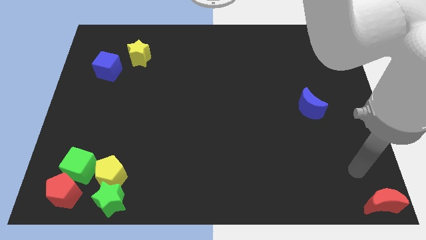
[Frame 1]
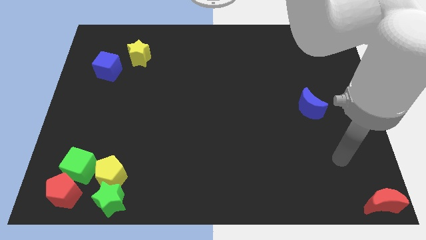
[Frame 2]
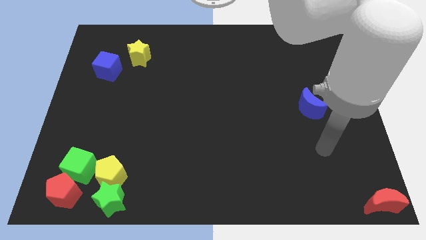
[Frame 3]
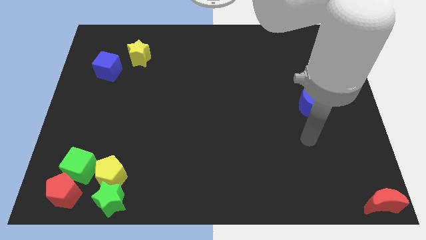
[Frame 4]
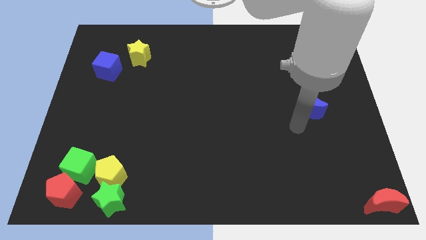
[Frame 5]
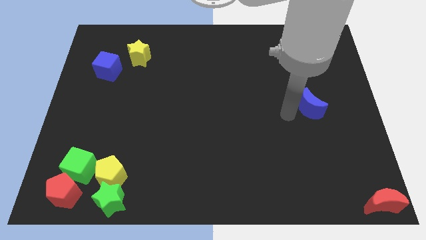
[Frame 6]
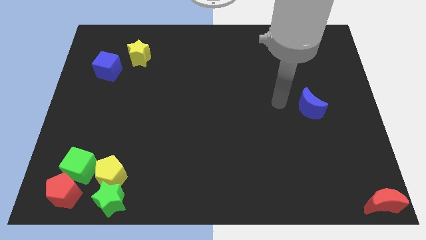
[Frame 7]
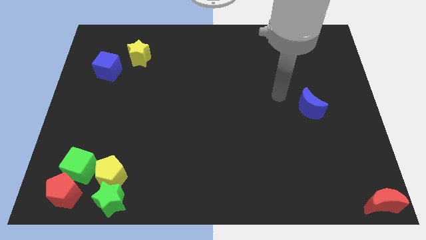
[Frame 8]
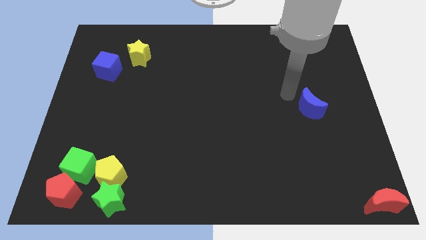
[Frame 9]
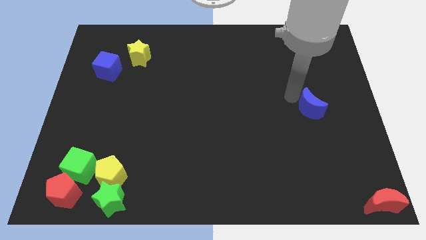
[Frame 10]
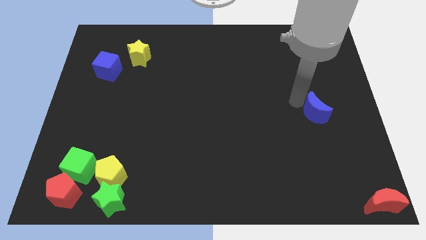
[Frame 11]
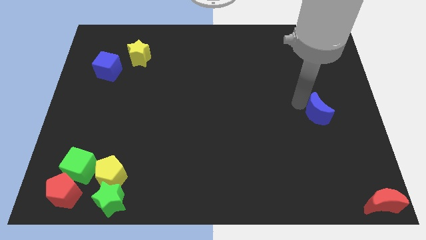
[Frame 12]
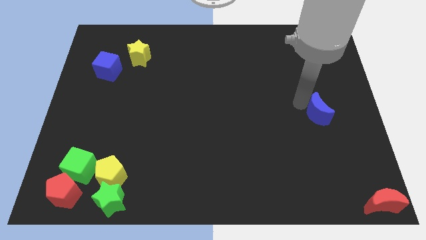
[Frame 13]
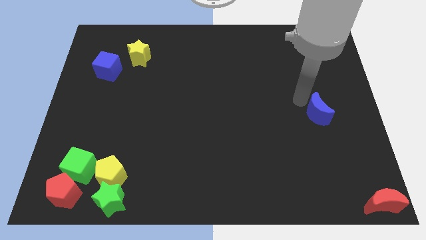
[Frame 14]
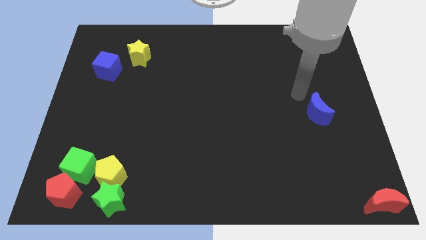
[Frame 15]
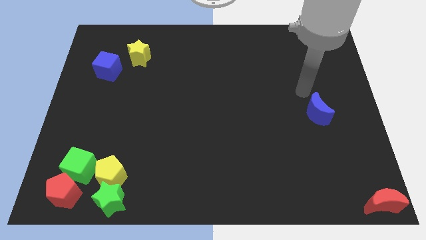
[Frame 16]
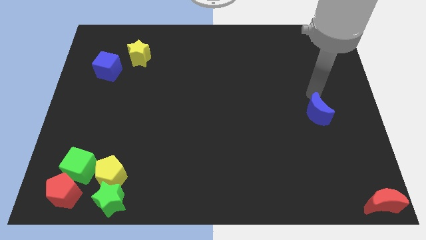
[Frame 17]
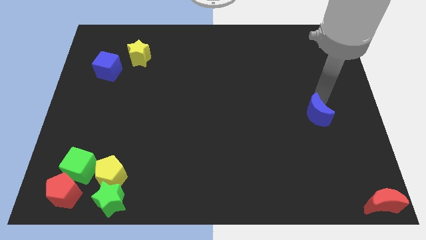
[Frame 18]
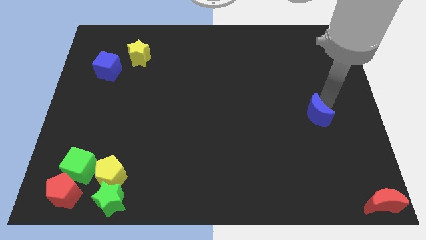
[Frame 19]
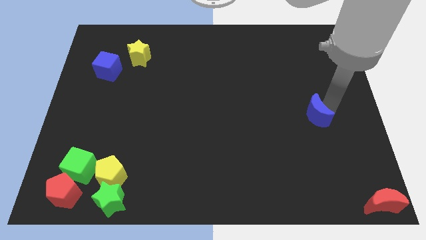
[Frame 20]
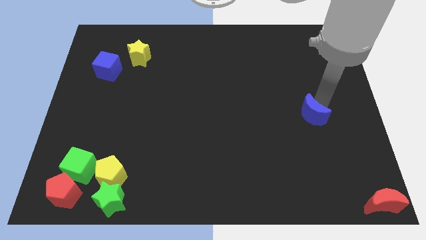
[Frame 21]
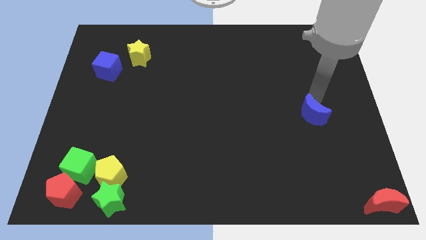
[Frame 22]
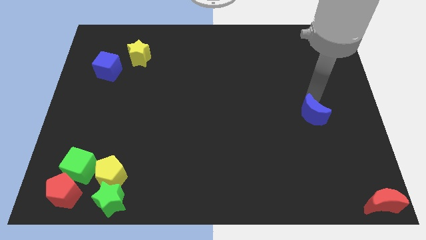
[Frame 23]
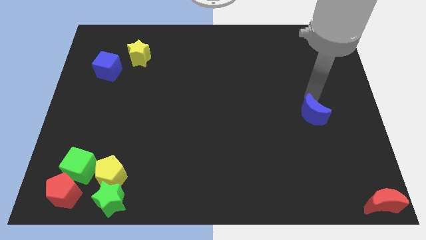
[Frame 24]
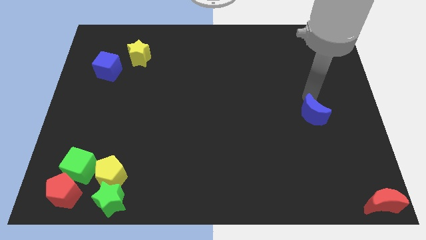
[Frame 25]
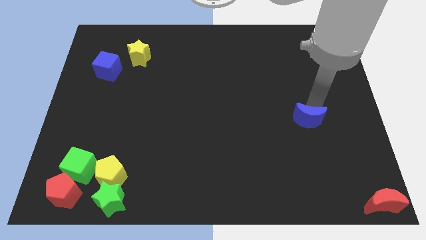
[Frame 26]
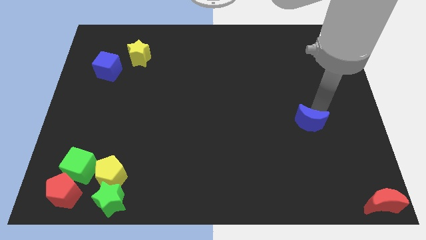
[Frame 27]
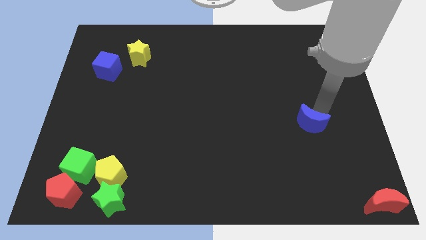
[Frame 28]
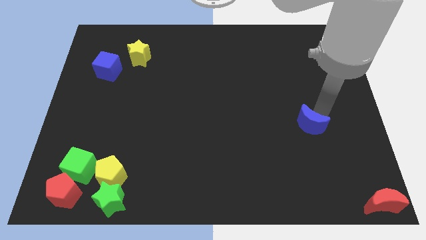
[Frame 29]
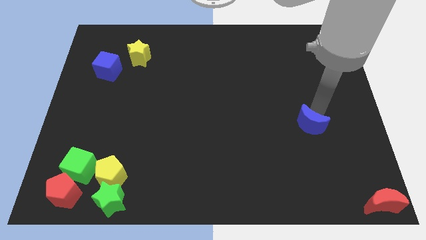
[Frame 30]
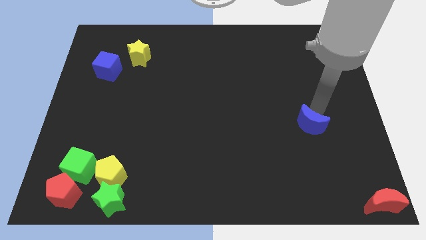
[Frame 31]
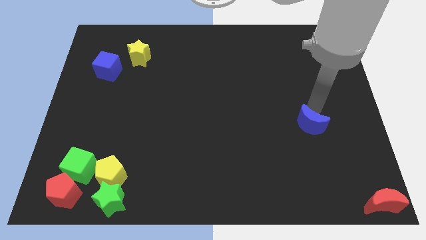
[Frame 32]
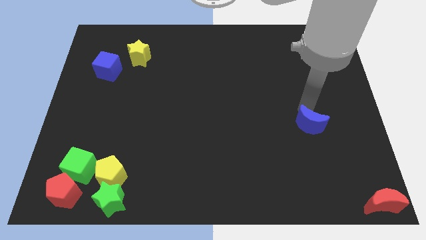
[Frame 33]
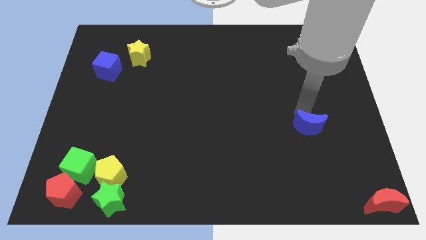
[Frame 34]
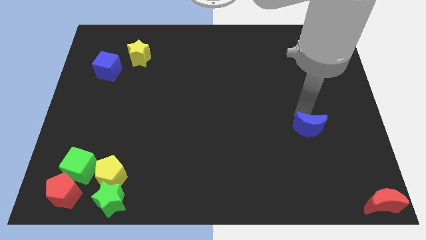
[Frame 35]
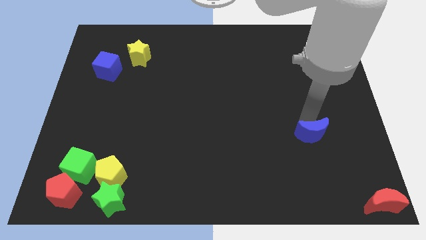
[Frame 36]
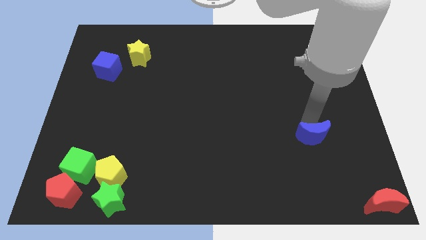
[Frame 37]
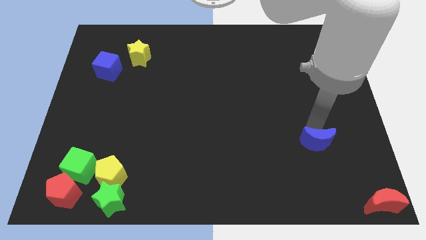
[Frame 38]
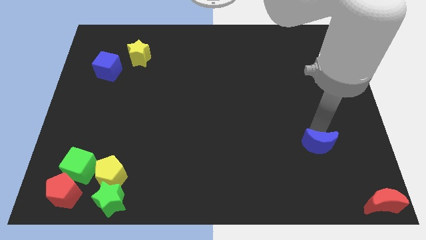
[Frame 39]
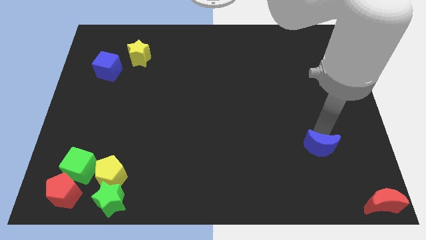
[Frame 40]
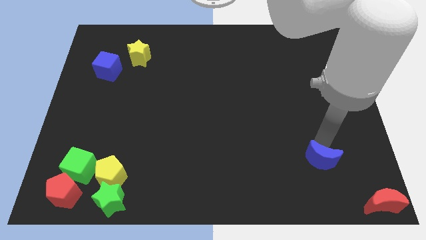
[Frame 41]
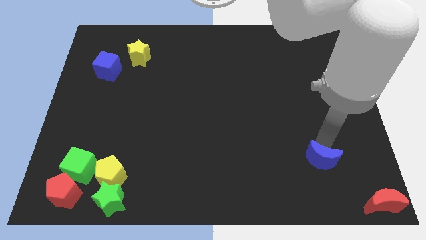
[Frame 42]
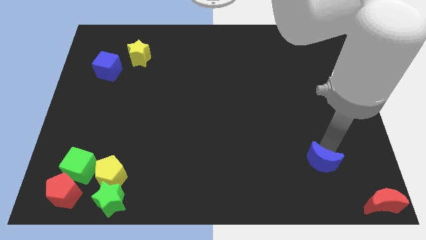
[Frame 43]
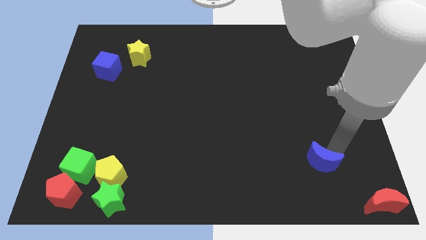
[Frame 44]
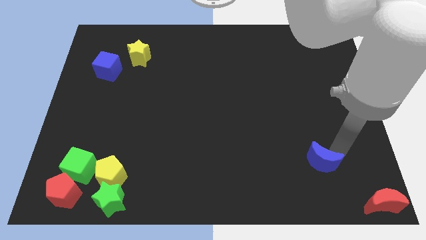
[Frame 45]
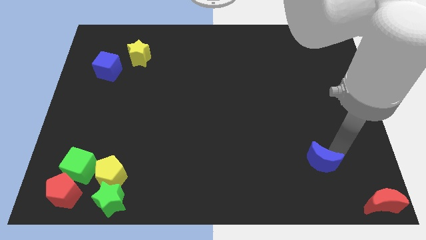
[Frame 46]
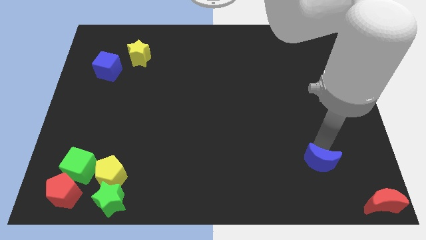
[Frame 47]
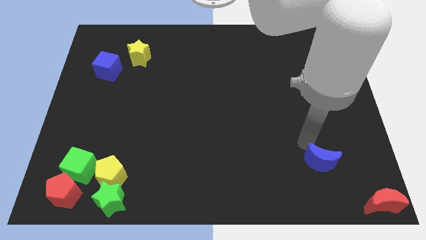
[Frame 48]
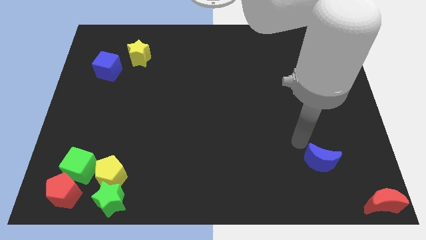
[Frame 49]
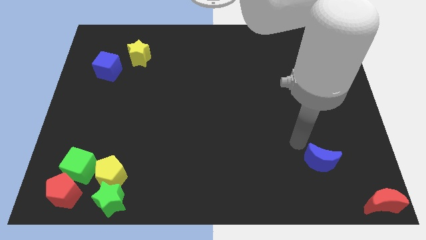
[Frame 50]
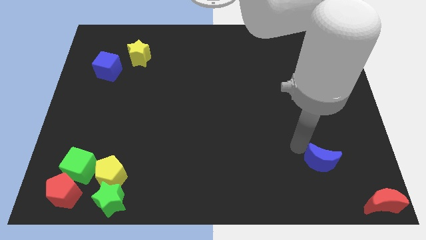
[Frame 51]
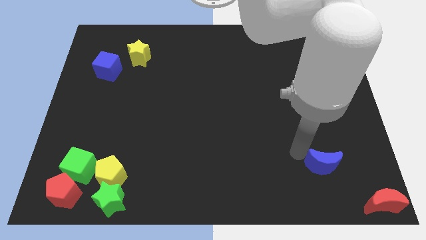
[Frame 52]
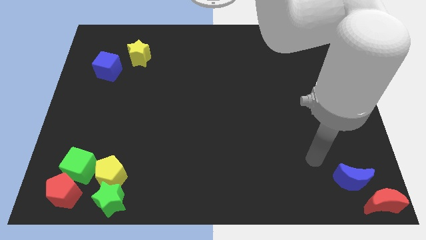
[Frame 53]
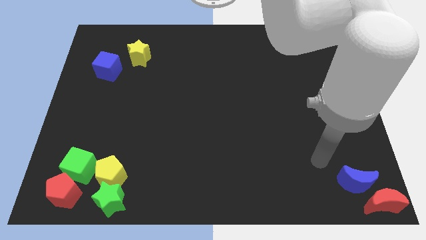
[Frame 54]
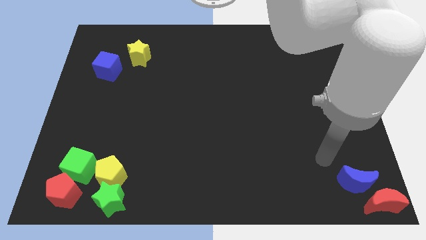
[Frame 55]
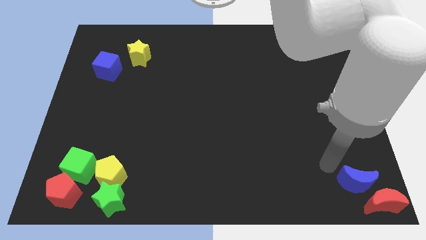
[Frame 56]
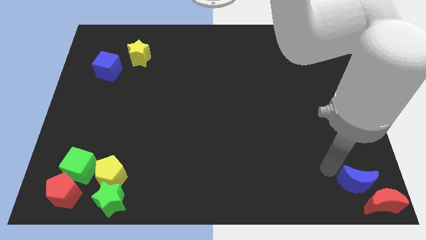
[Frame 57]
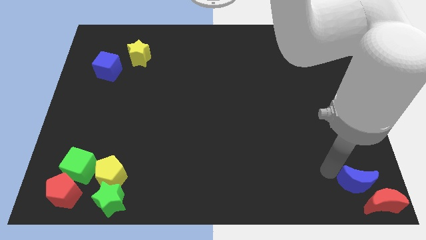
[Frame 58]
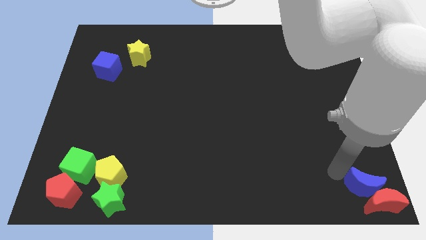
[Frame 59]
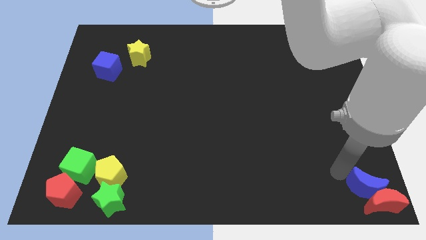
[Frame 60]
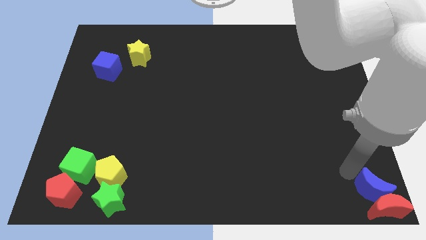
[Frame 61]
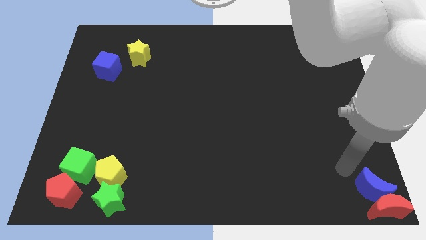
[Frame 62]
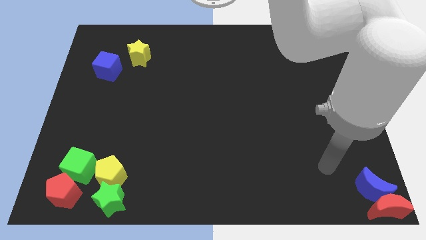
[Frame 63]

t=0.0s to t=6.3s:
move the blue crescent to the top of the red crescent

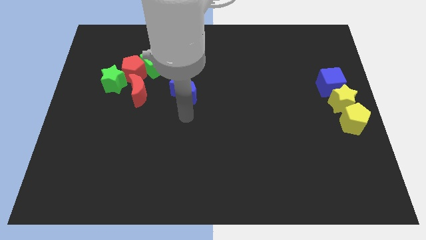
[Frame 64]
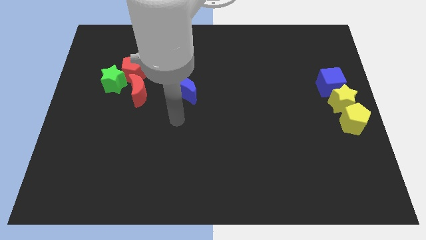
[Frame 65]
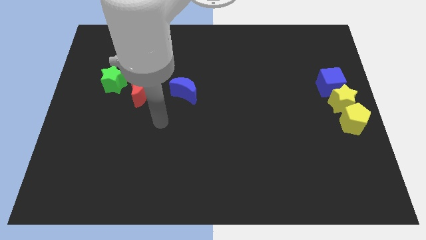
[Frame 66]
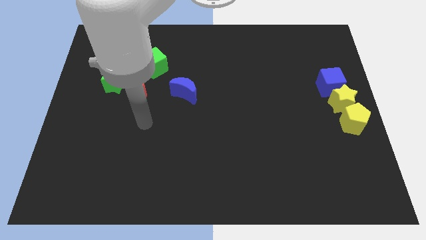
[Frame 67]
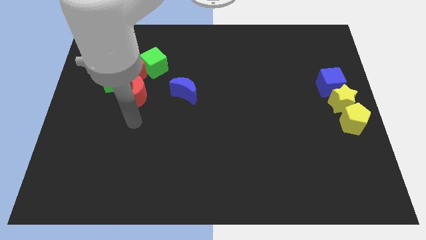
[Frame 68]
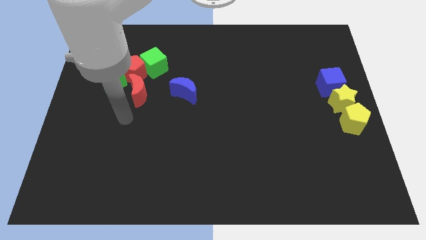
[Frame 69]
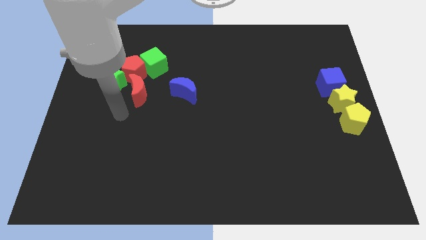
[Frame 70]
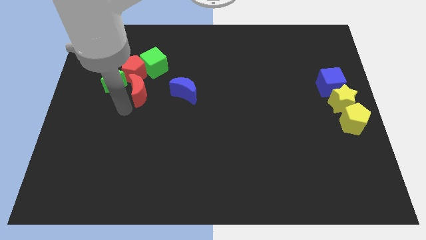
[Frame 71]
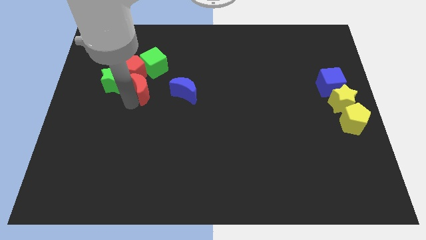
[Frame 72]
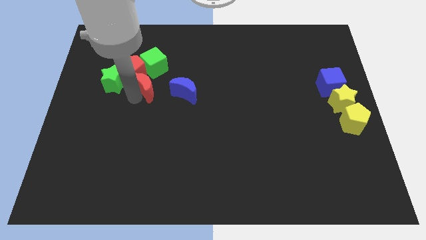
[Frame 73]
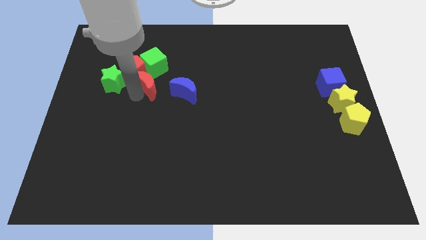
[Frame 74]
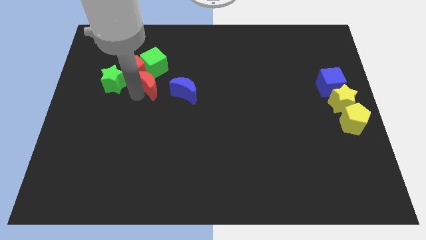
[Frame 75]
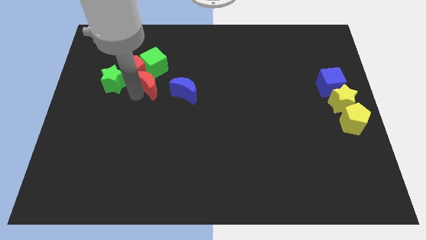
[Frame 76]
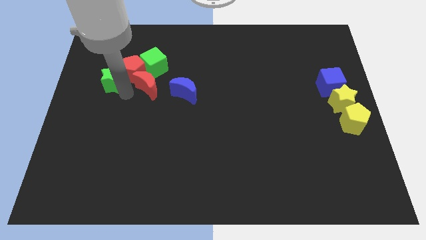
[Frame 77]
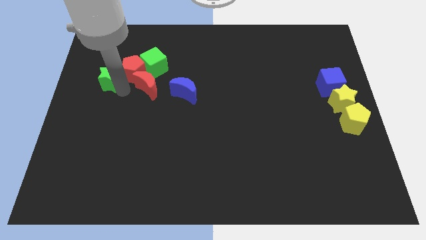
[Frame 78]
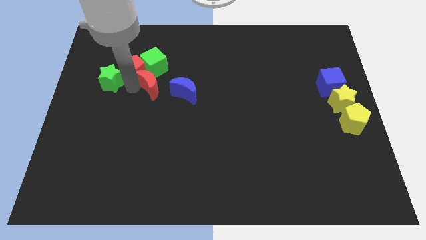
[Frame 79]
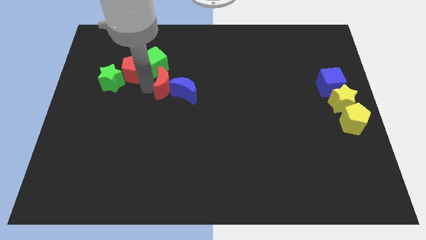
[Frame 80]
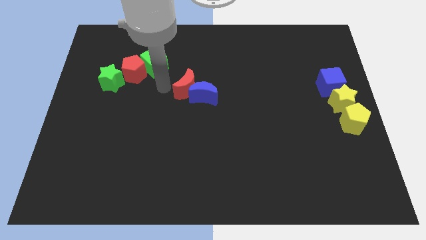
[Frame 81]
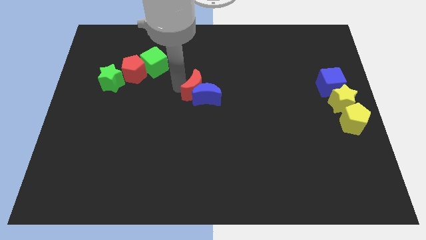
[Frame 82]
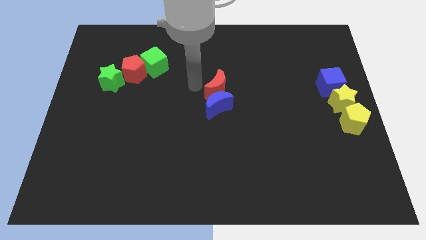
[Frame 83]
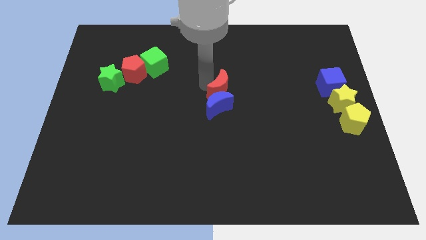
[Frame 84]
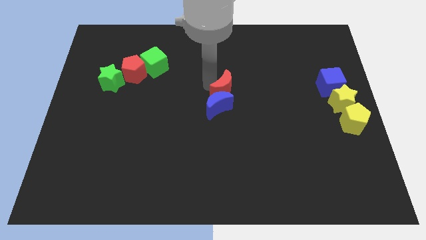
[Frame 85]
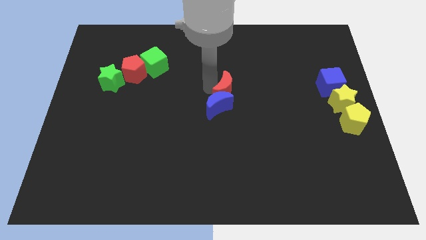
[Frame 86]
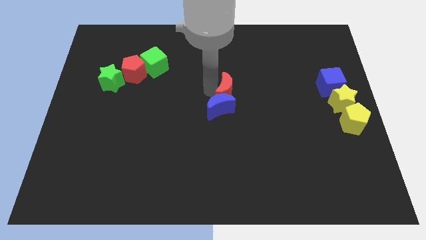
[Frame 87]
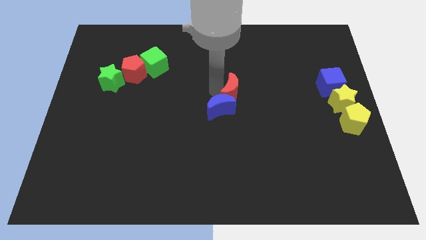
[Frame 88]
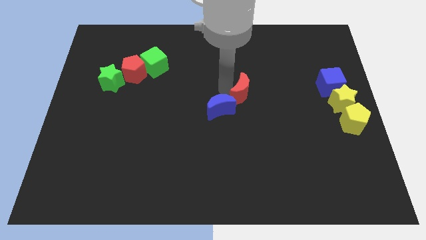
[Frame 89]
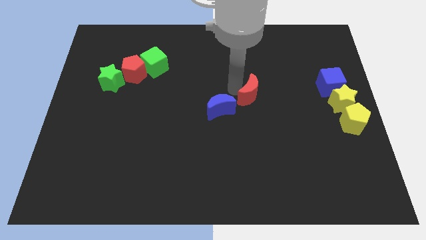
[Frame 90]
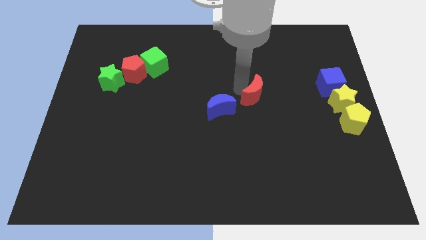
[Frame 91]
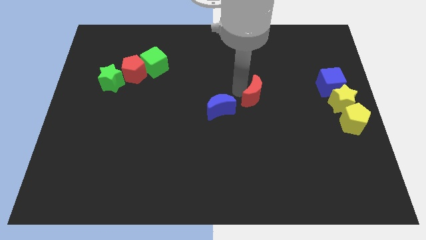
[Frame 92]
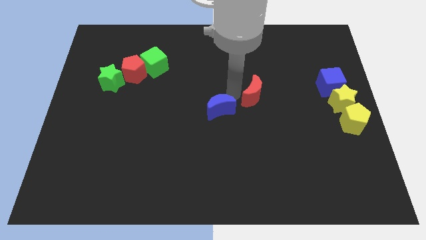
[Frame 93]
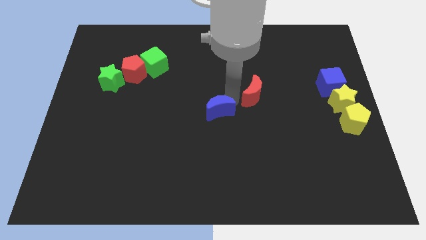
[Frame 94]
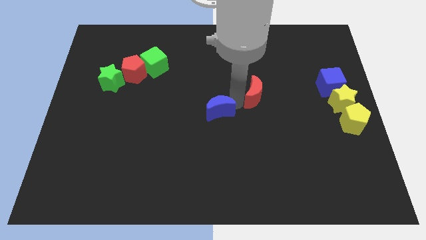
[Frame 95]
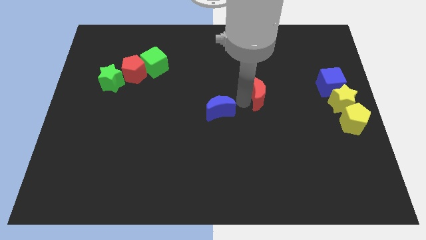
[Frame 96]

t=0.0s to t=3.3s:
move the red crescent away from the red pentagon
